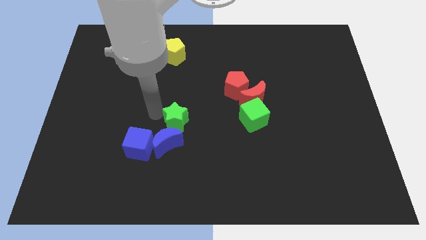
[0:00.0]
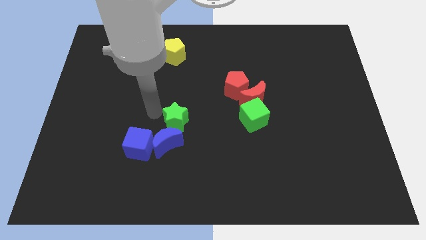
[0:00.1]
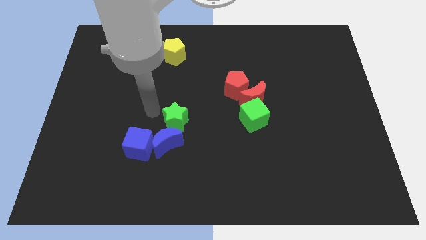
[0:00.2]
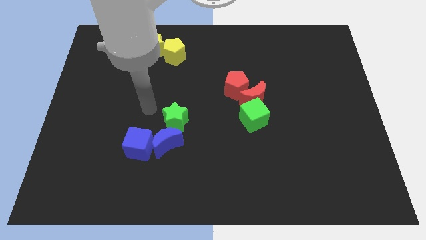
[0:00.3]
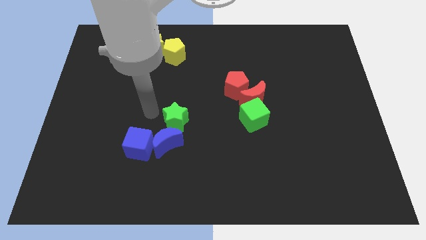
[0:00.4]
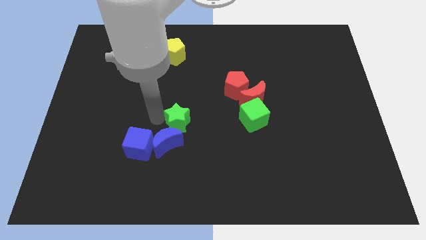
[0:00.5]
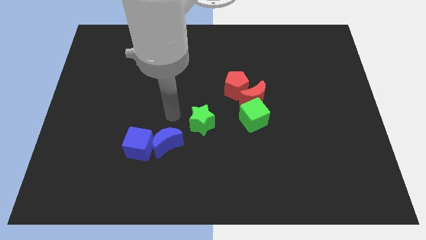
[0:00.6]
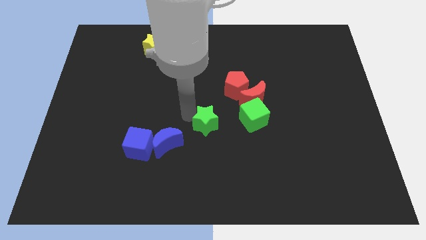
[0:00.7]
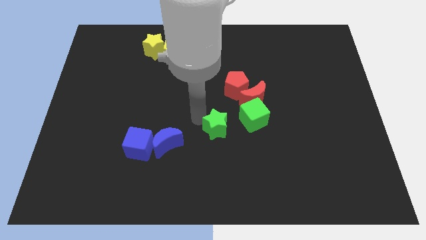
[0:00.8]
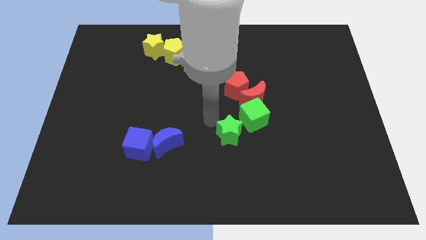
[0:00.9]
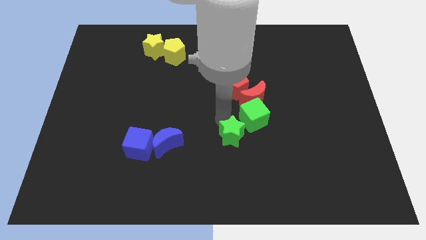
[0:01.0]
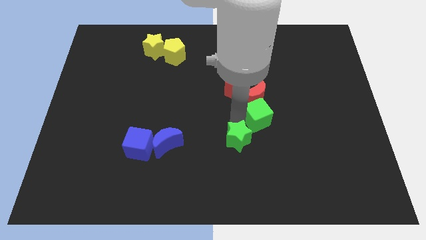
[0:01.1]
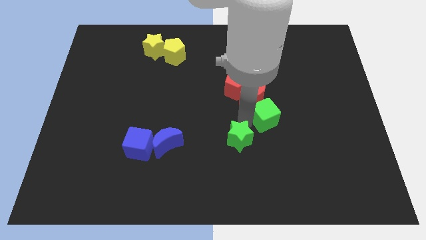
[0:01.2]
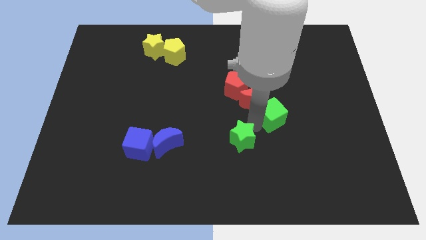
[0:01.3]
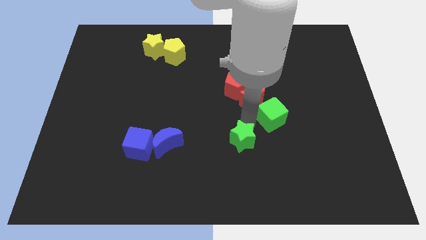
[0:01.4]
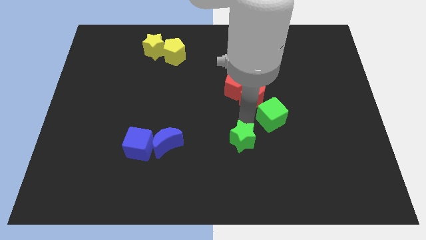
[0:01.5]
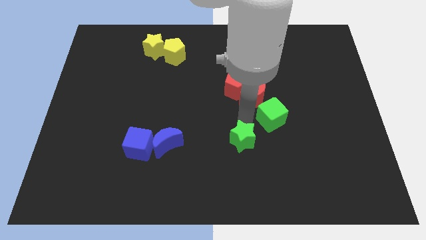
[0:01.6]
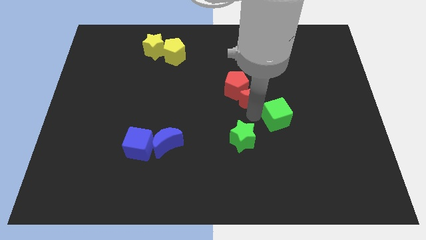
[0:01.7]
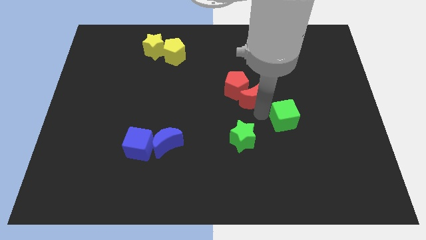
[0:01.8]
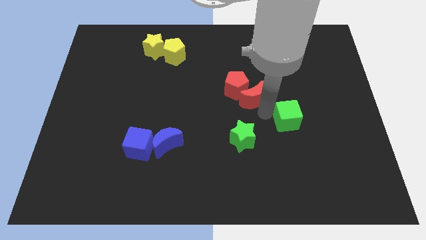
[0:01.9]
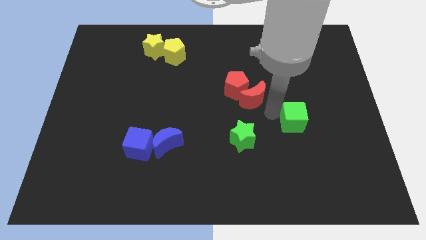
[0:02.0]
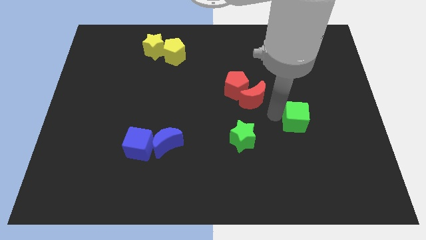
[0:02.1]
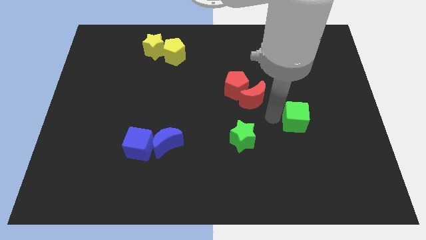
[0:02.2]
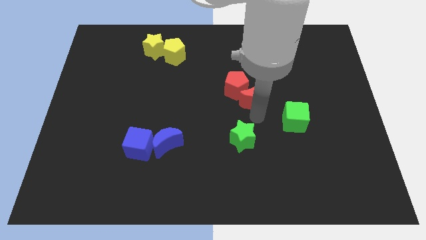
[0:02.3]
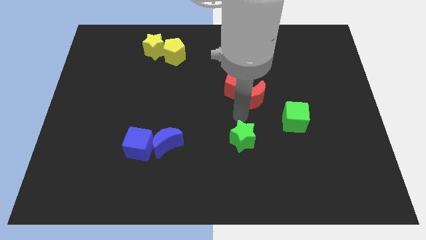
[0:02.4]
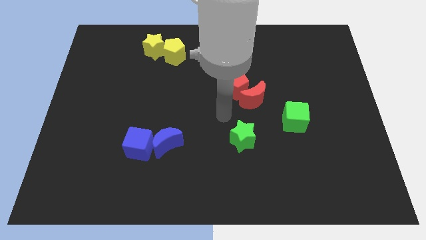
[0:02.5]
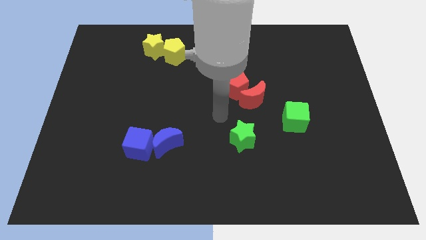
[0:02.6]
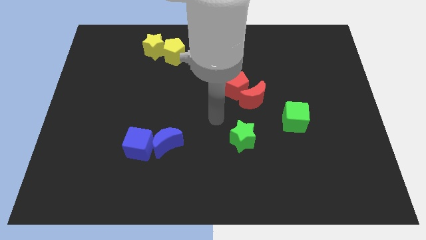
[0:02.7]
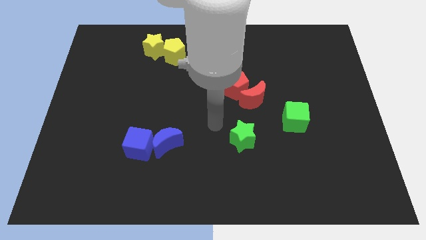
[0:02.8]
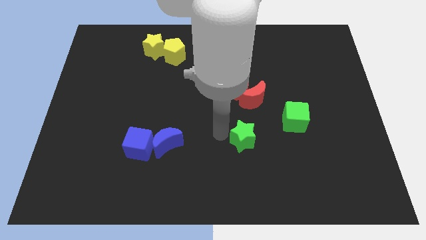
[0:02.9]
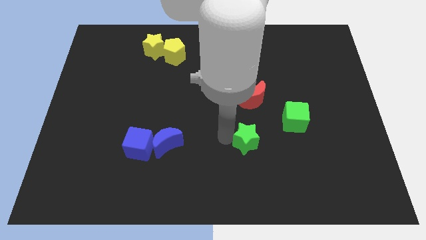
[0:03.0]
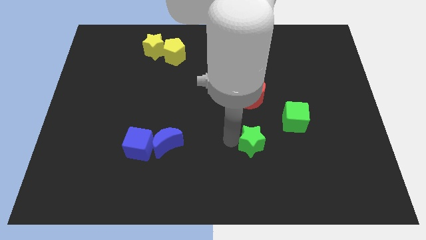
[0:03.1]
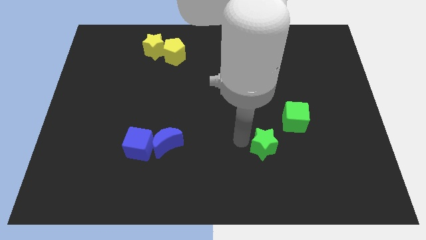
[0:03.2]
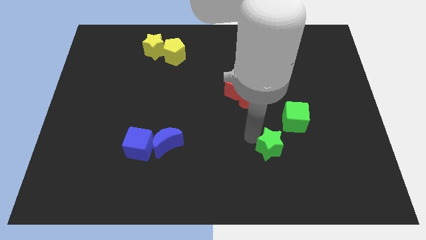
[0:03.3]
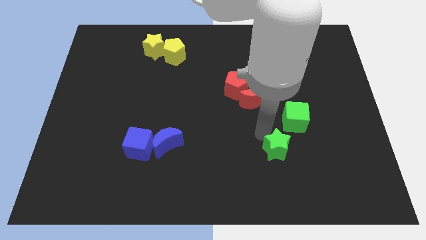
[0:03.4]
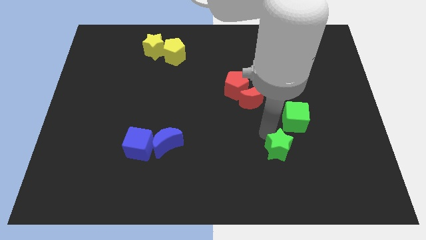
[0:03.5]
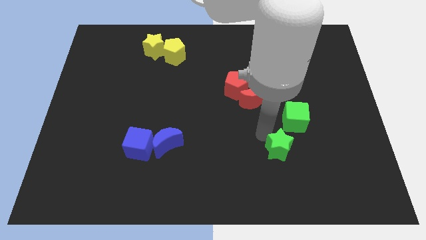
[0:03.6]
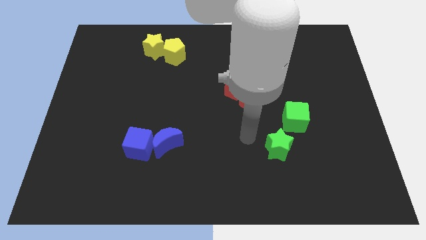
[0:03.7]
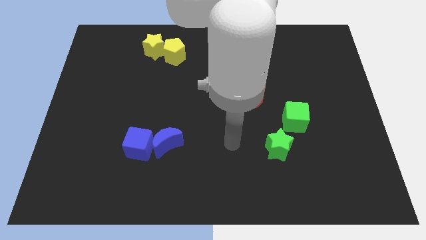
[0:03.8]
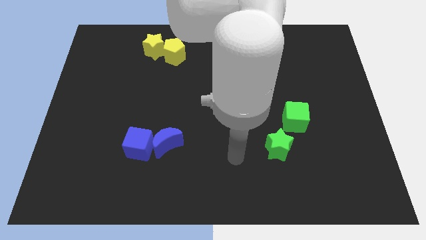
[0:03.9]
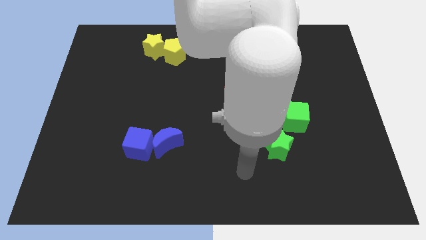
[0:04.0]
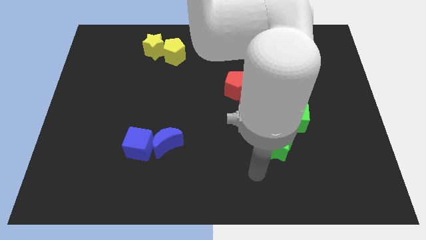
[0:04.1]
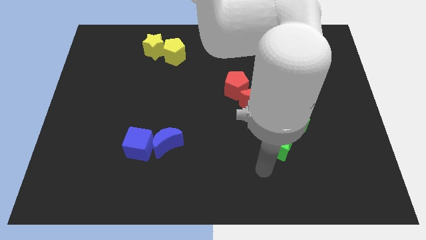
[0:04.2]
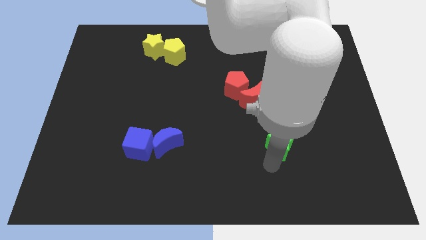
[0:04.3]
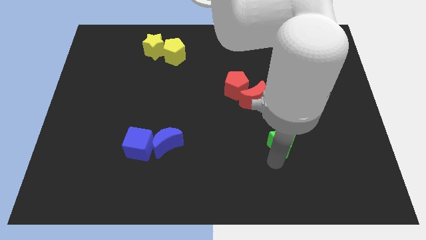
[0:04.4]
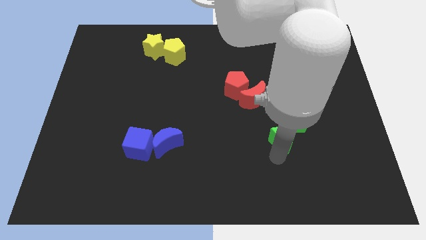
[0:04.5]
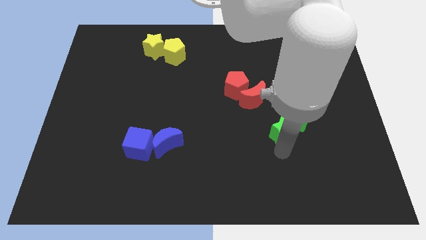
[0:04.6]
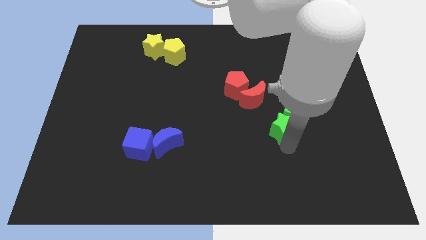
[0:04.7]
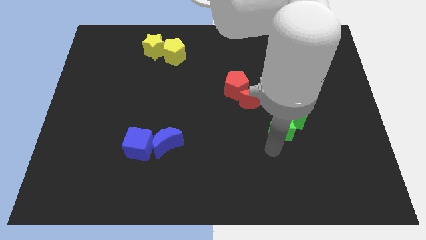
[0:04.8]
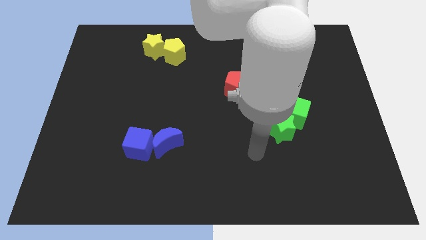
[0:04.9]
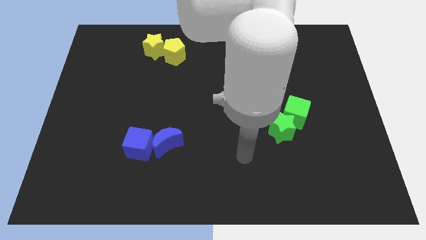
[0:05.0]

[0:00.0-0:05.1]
push the green star into the green cube

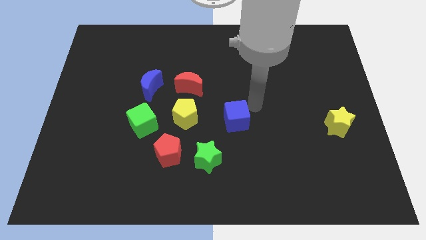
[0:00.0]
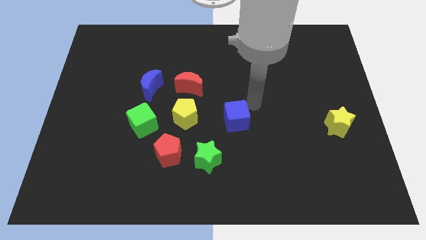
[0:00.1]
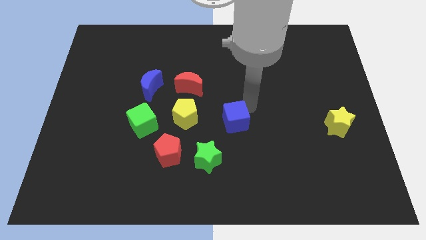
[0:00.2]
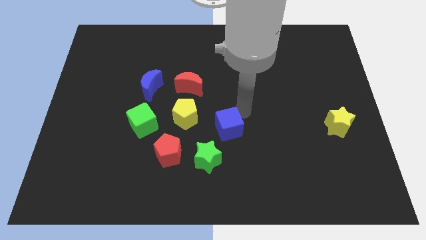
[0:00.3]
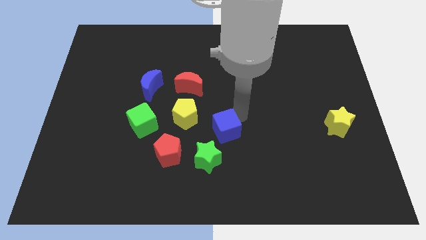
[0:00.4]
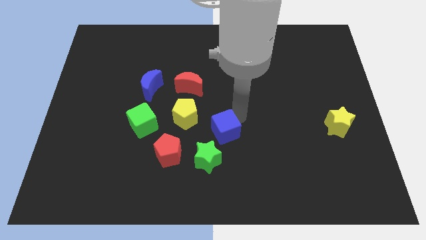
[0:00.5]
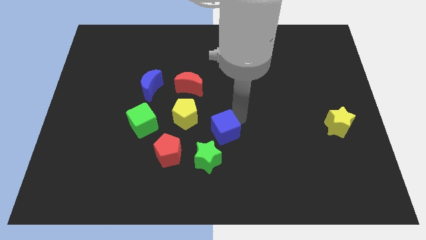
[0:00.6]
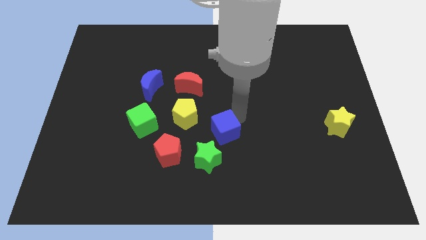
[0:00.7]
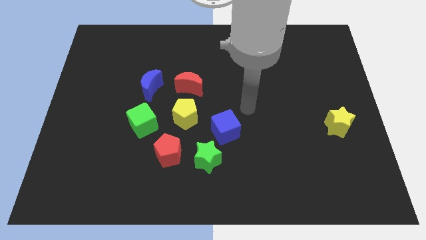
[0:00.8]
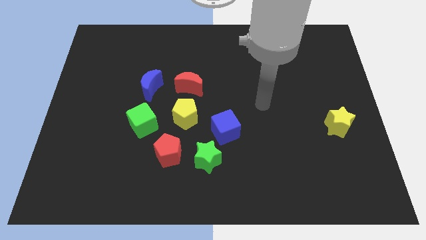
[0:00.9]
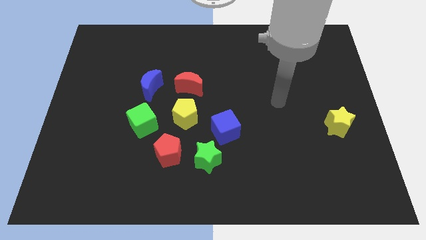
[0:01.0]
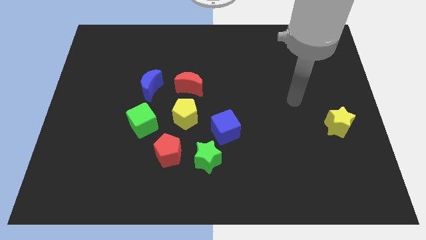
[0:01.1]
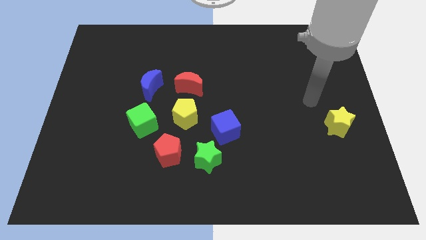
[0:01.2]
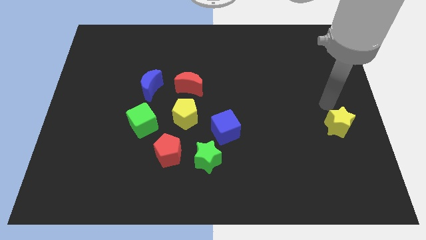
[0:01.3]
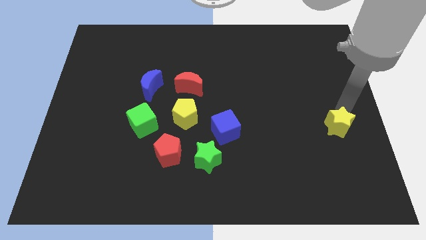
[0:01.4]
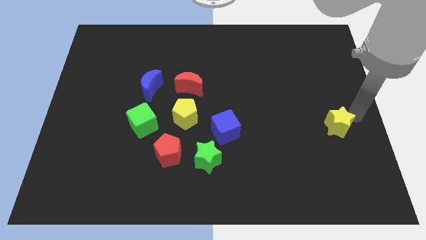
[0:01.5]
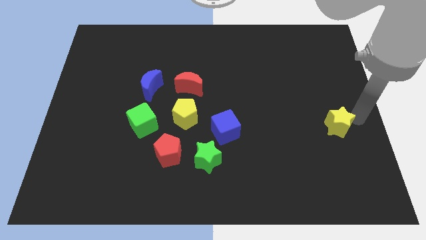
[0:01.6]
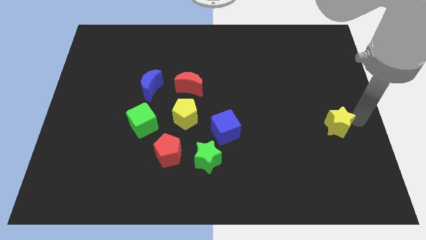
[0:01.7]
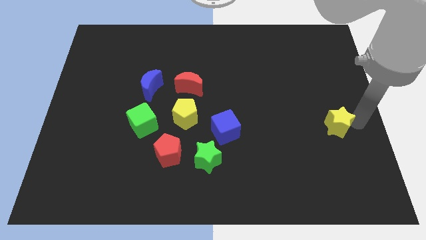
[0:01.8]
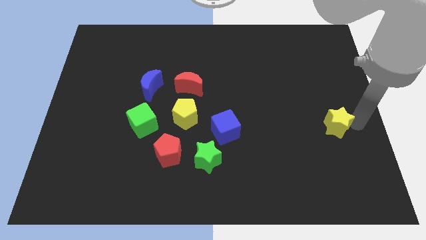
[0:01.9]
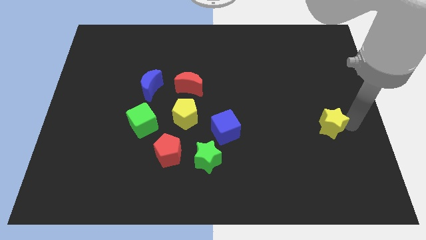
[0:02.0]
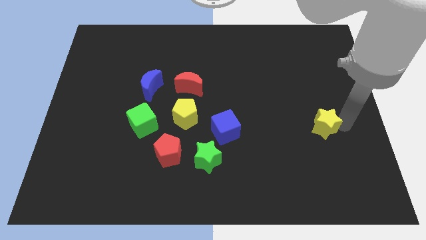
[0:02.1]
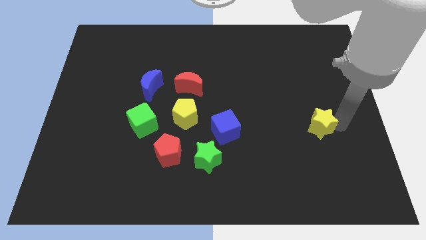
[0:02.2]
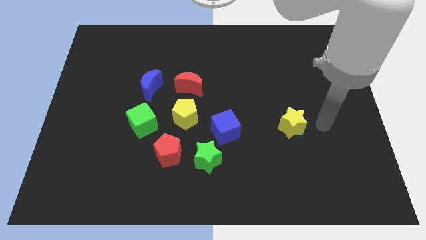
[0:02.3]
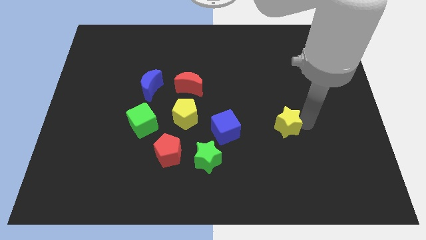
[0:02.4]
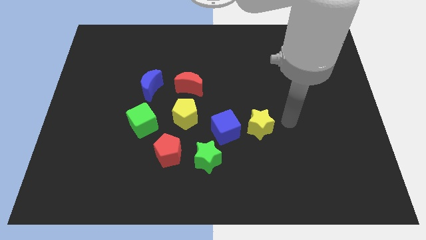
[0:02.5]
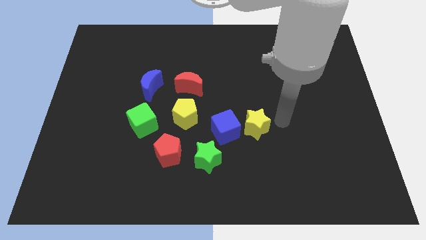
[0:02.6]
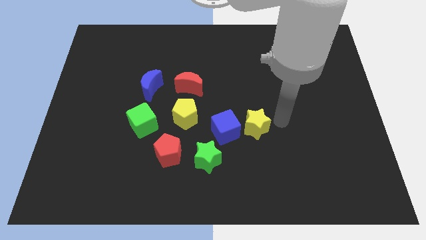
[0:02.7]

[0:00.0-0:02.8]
move the yellow star right to the blue cube

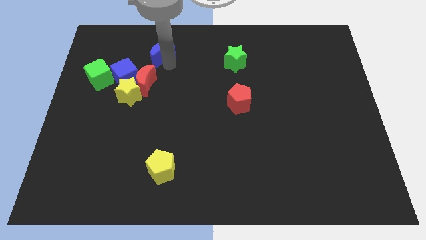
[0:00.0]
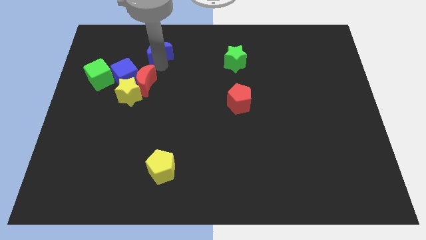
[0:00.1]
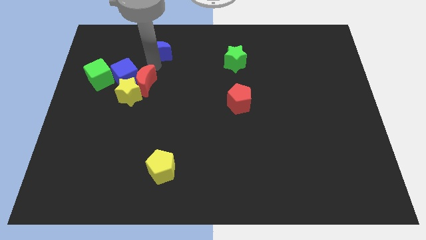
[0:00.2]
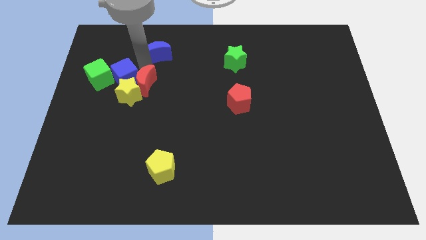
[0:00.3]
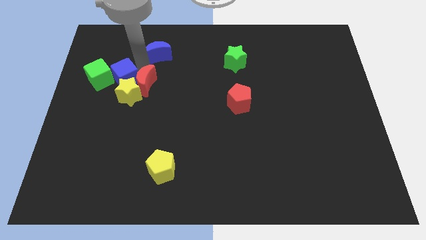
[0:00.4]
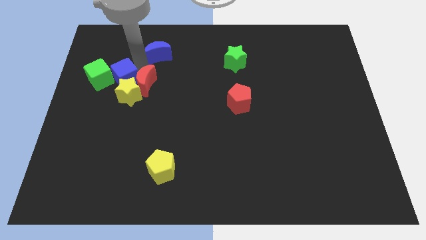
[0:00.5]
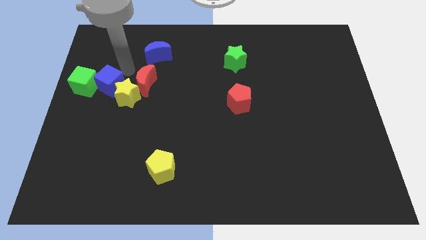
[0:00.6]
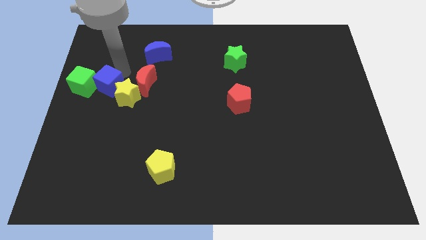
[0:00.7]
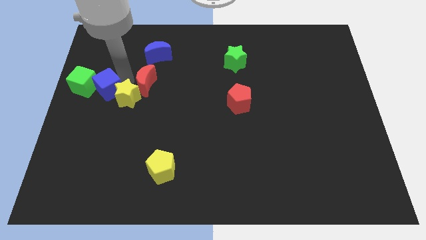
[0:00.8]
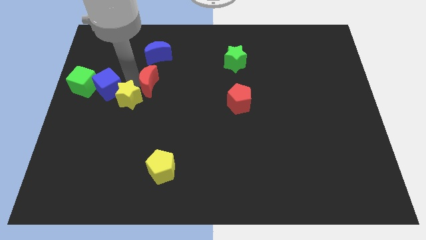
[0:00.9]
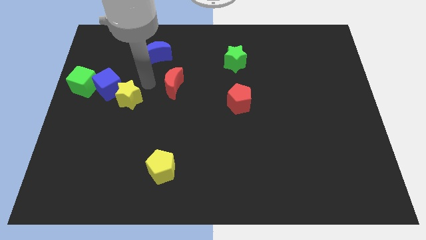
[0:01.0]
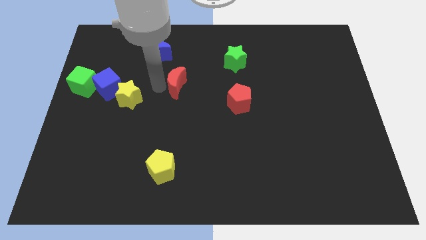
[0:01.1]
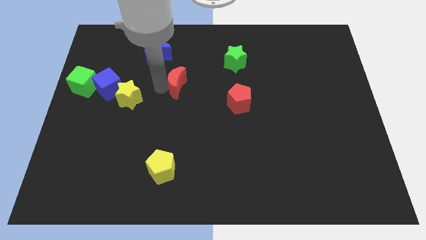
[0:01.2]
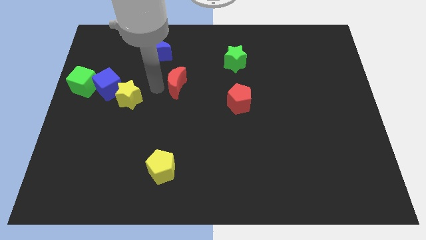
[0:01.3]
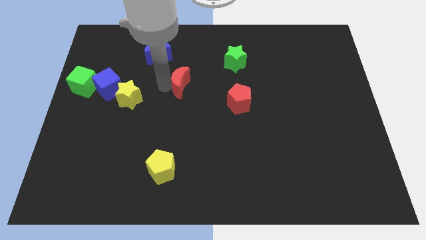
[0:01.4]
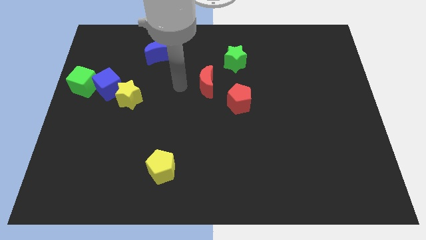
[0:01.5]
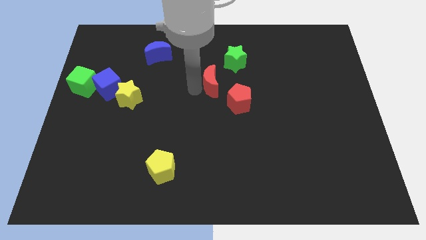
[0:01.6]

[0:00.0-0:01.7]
separate the red moon from a group of blocks
